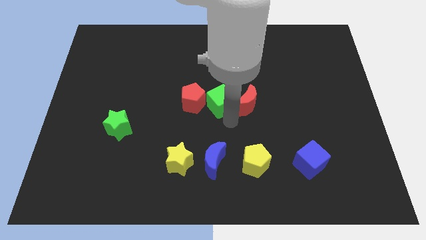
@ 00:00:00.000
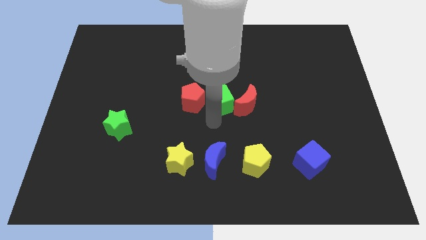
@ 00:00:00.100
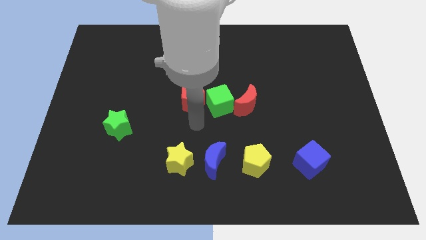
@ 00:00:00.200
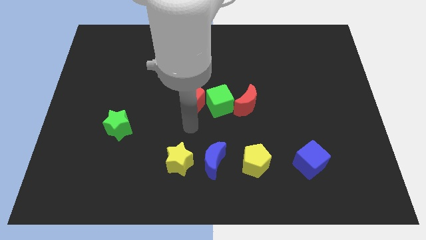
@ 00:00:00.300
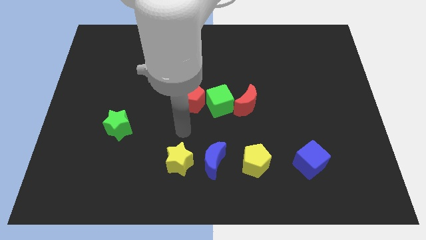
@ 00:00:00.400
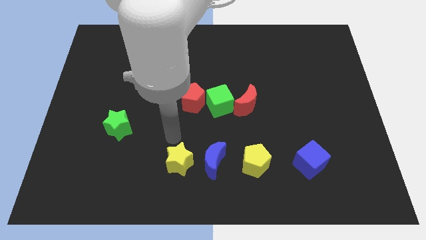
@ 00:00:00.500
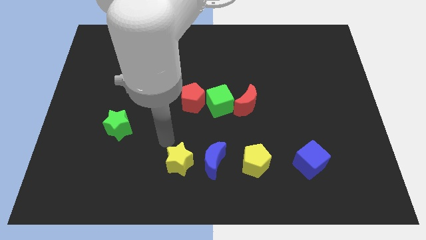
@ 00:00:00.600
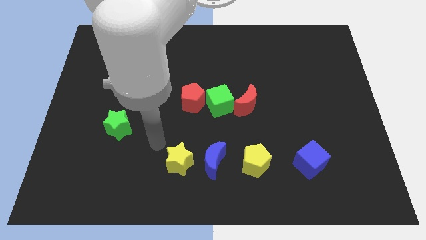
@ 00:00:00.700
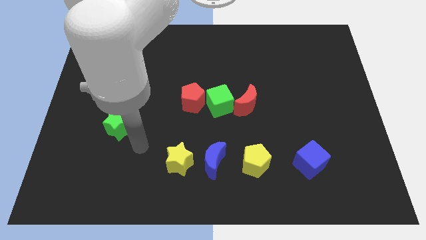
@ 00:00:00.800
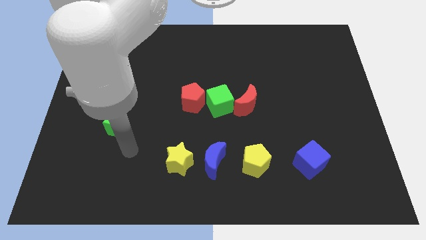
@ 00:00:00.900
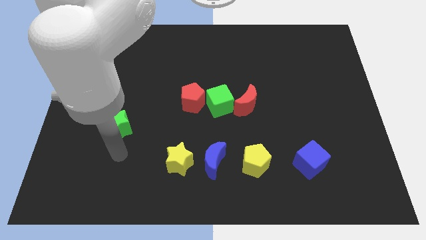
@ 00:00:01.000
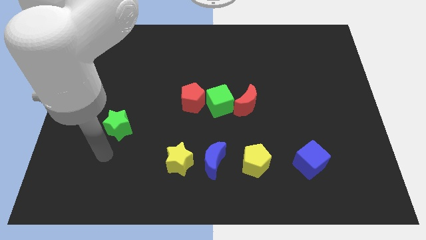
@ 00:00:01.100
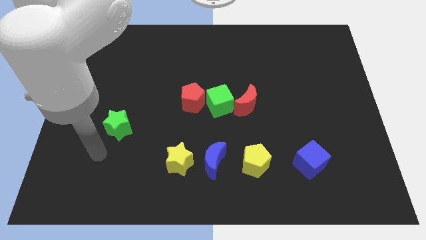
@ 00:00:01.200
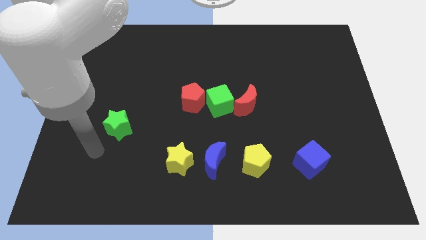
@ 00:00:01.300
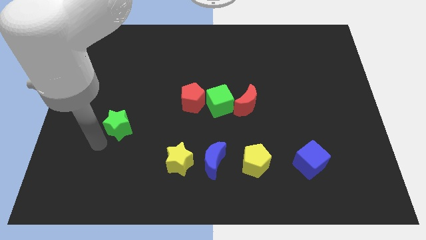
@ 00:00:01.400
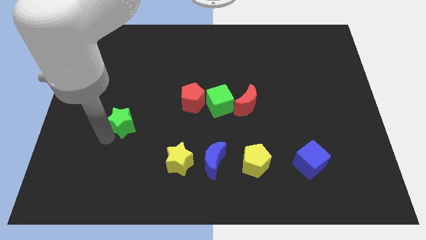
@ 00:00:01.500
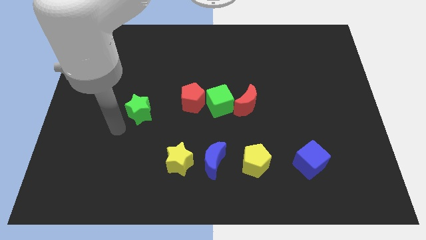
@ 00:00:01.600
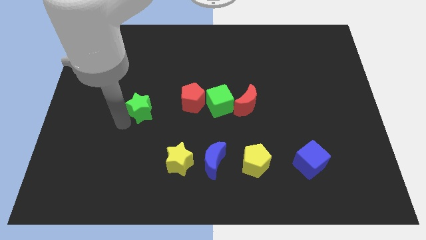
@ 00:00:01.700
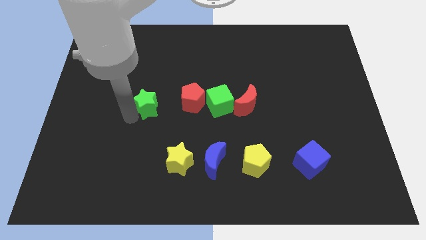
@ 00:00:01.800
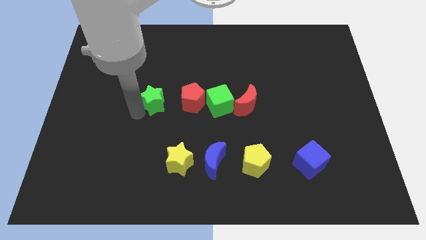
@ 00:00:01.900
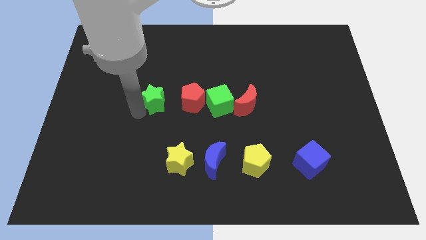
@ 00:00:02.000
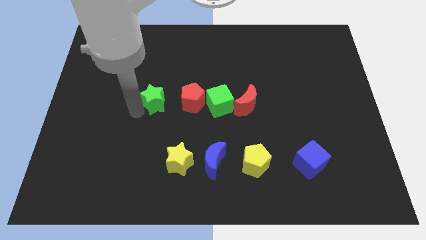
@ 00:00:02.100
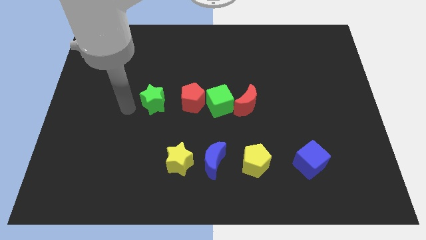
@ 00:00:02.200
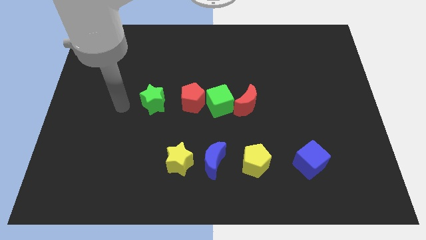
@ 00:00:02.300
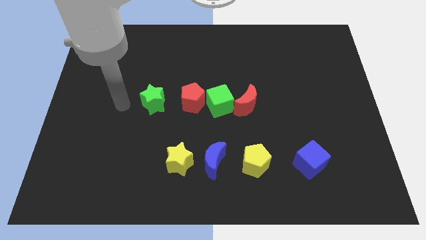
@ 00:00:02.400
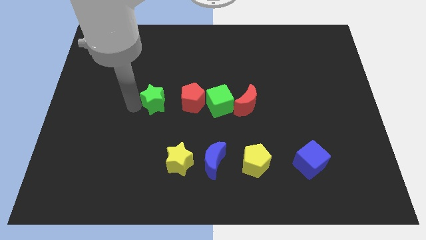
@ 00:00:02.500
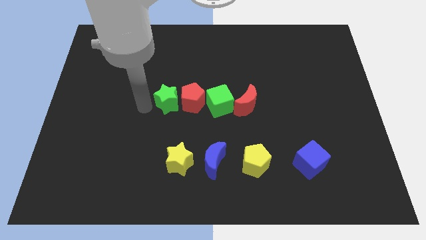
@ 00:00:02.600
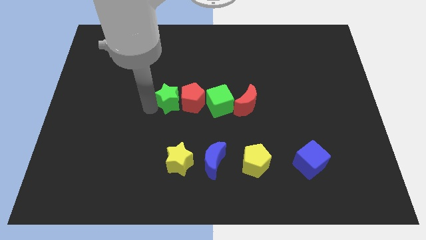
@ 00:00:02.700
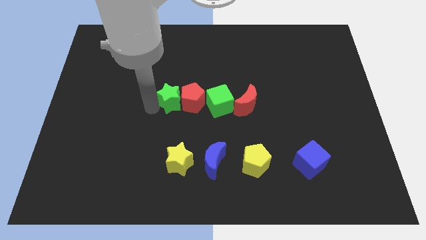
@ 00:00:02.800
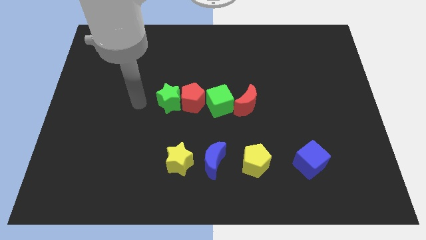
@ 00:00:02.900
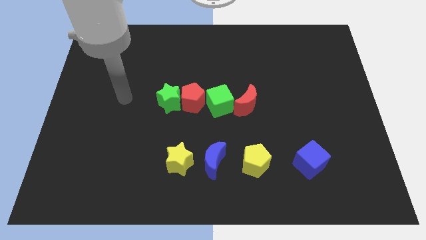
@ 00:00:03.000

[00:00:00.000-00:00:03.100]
push the green star to the left side of the red pentagon

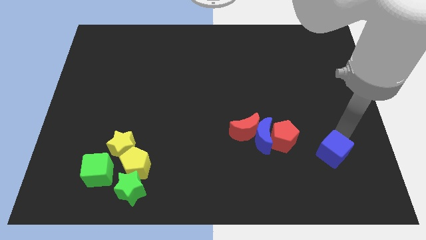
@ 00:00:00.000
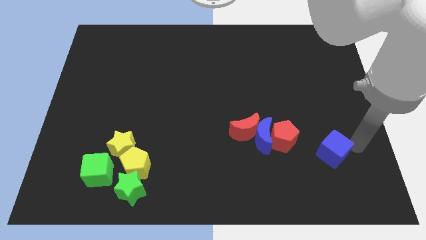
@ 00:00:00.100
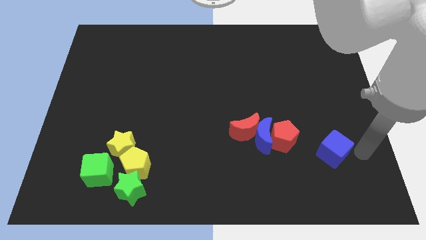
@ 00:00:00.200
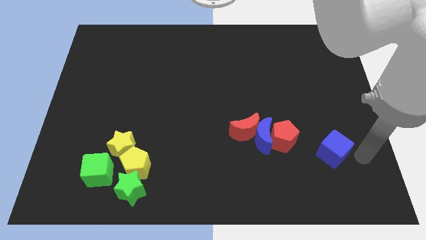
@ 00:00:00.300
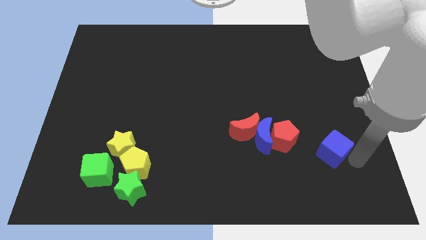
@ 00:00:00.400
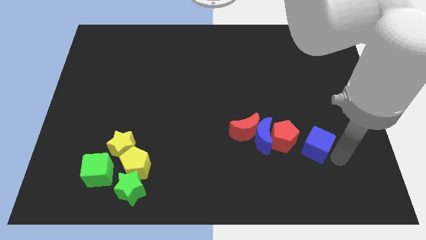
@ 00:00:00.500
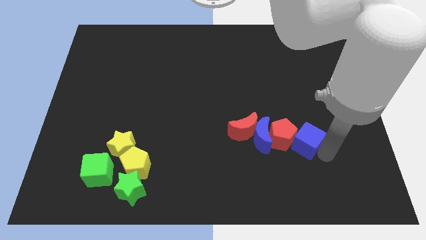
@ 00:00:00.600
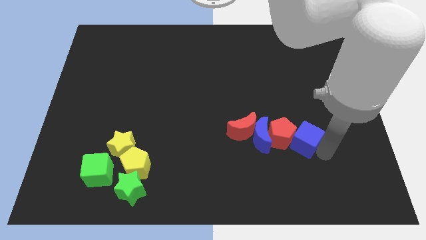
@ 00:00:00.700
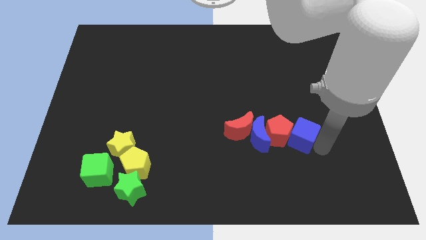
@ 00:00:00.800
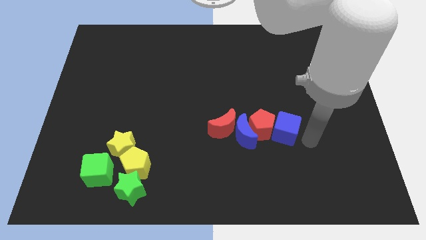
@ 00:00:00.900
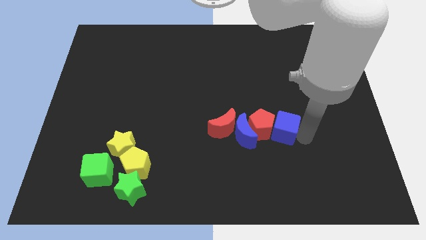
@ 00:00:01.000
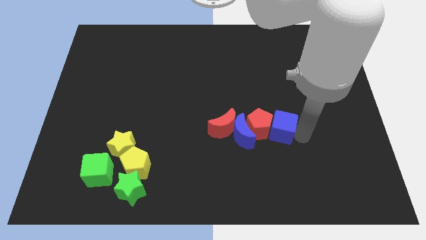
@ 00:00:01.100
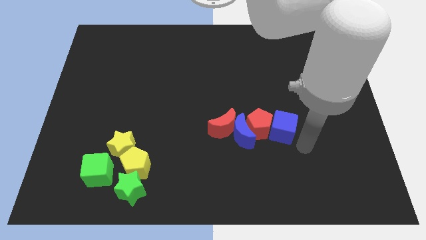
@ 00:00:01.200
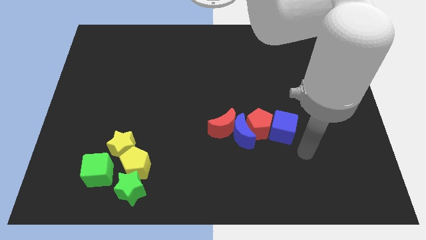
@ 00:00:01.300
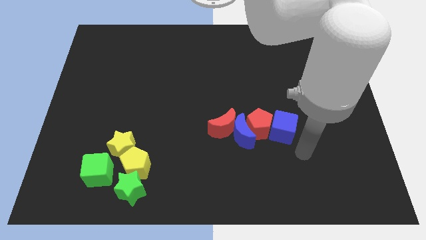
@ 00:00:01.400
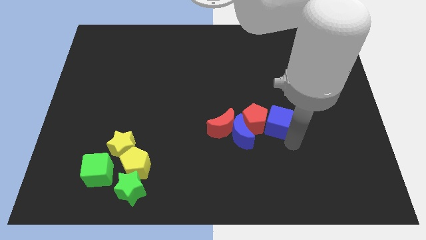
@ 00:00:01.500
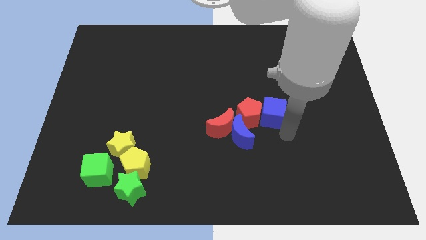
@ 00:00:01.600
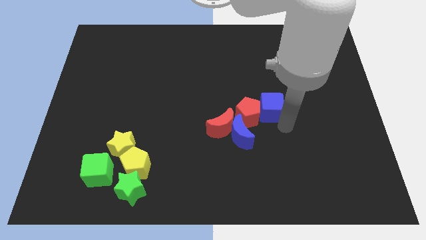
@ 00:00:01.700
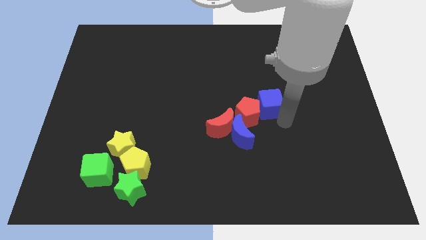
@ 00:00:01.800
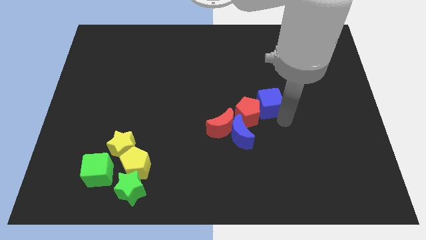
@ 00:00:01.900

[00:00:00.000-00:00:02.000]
push the blue cube into the group of blocks

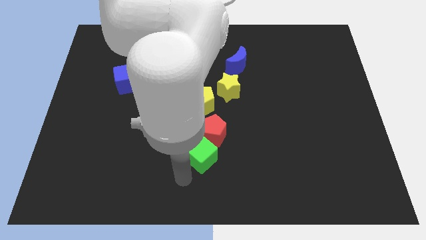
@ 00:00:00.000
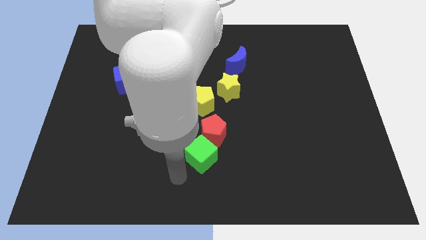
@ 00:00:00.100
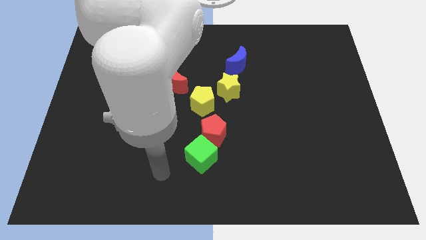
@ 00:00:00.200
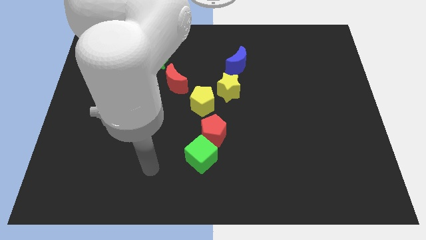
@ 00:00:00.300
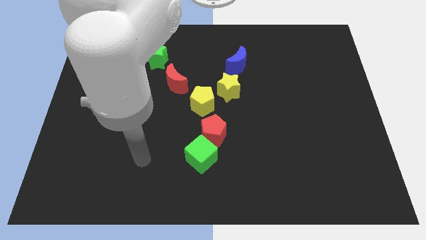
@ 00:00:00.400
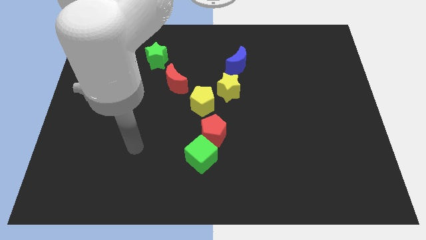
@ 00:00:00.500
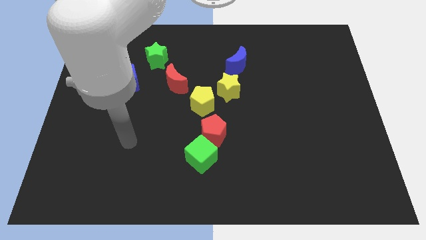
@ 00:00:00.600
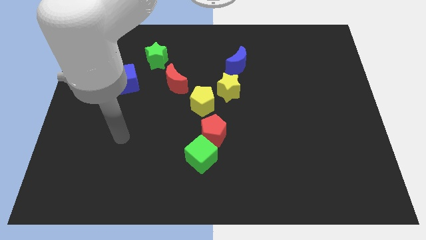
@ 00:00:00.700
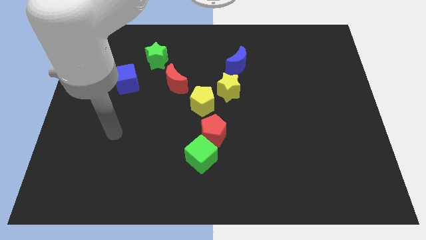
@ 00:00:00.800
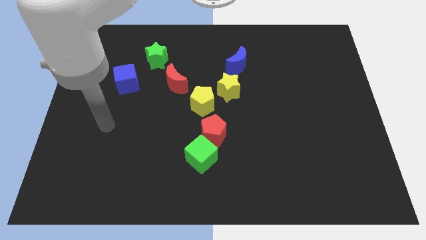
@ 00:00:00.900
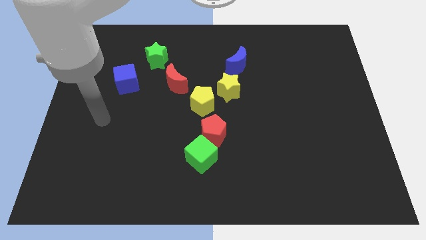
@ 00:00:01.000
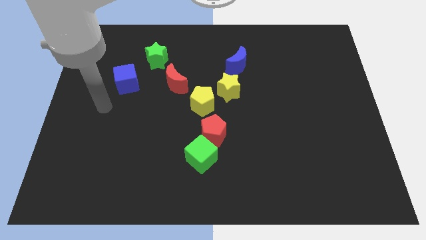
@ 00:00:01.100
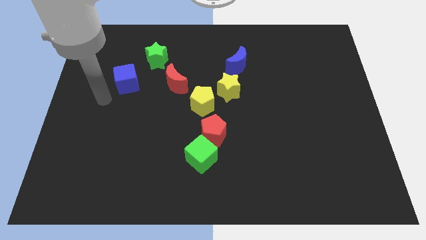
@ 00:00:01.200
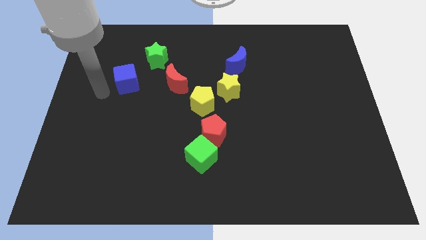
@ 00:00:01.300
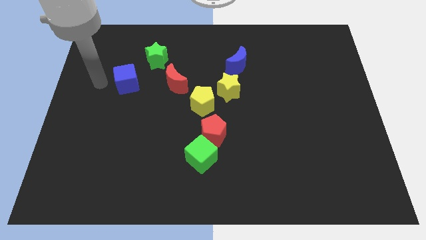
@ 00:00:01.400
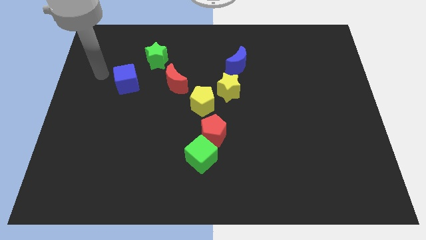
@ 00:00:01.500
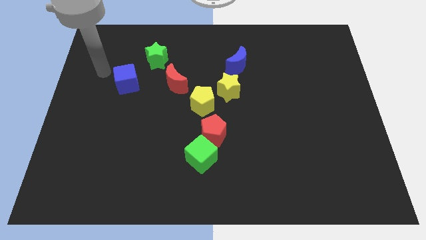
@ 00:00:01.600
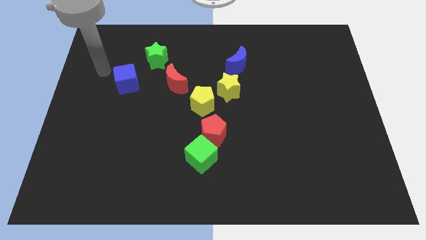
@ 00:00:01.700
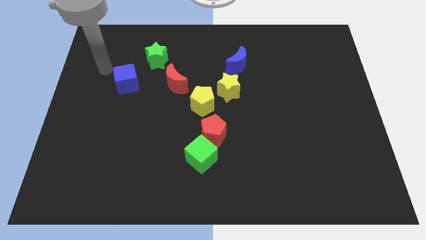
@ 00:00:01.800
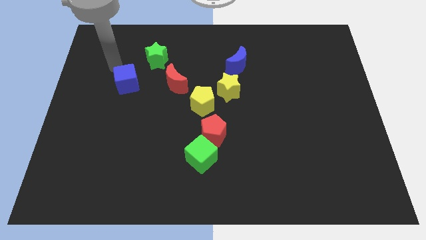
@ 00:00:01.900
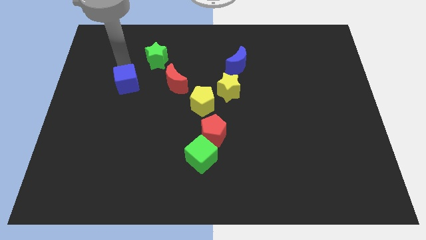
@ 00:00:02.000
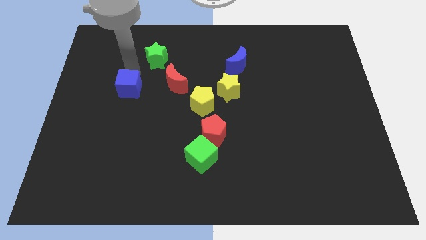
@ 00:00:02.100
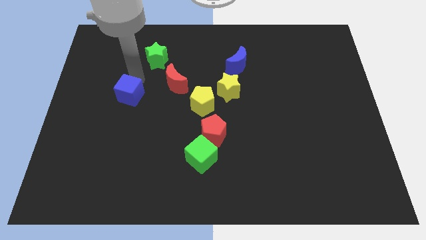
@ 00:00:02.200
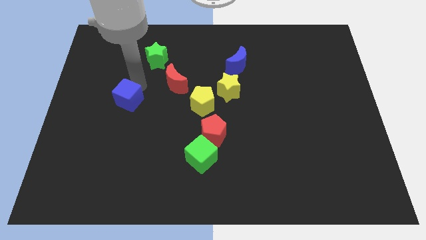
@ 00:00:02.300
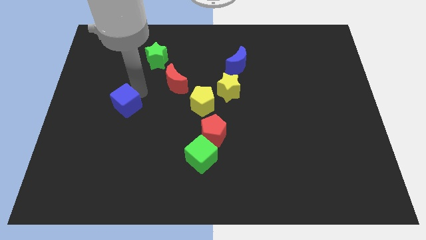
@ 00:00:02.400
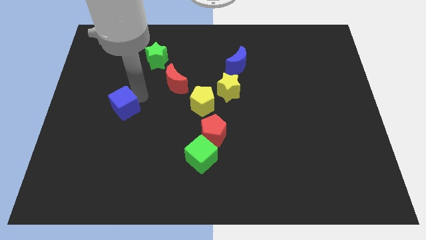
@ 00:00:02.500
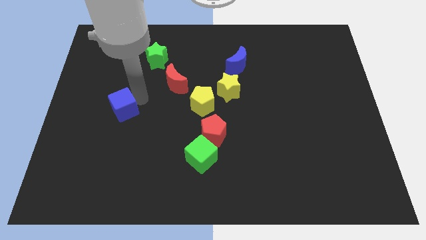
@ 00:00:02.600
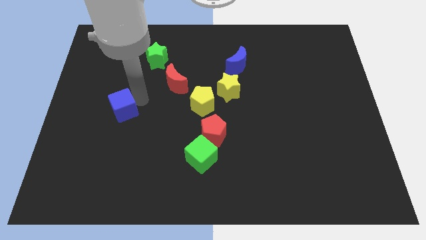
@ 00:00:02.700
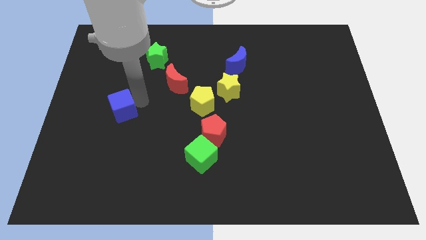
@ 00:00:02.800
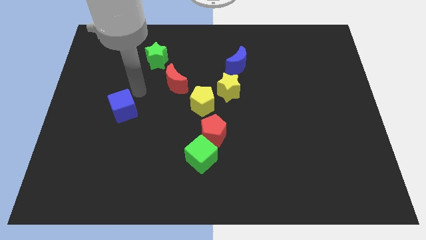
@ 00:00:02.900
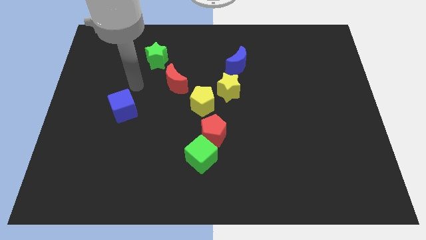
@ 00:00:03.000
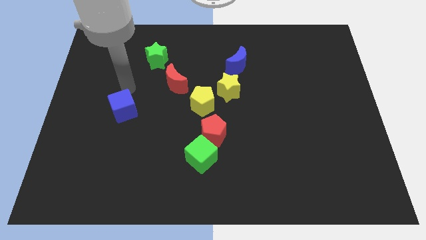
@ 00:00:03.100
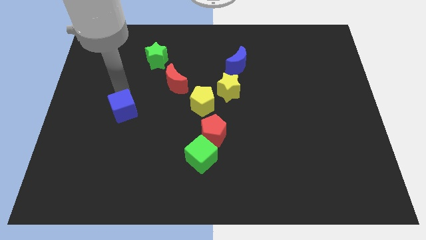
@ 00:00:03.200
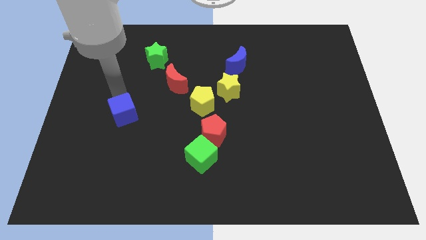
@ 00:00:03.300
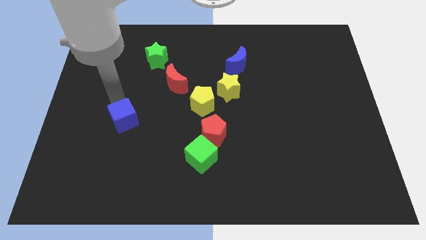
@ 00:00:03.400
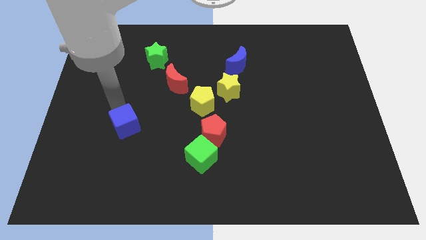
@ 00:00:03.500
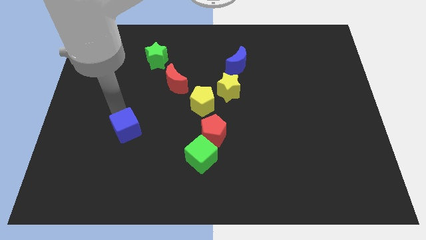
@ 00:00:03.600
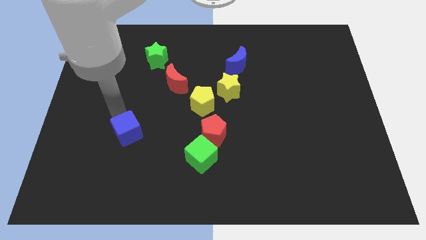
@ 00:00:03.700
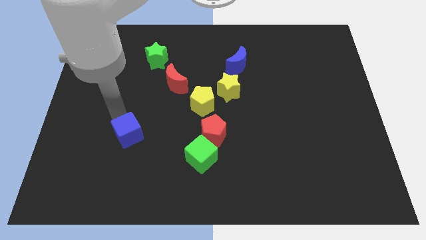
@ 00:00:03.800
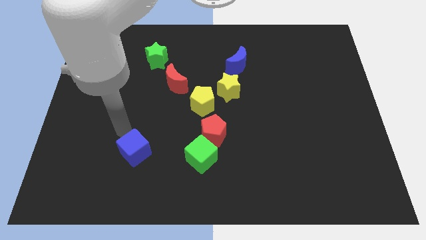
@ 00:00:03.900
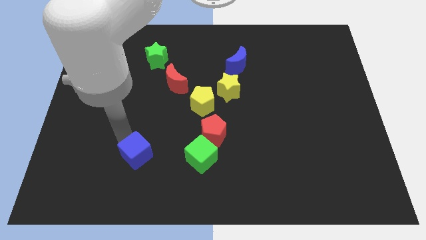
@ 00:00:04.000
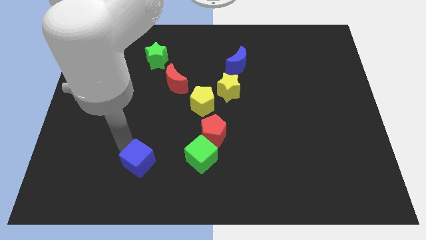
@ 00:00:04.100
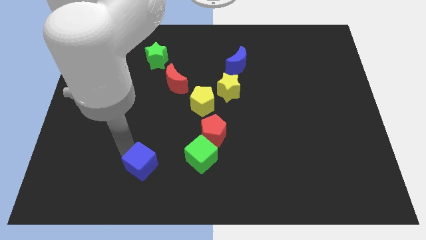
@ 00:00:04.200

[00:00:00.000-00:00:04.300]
place the blue cube to the left of the green cube
